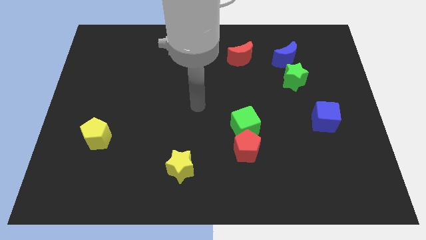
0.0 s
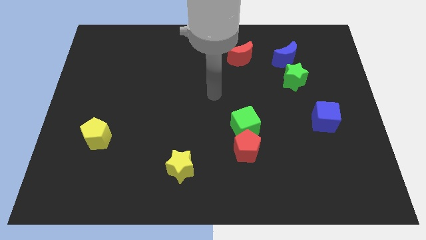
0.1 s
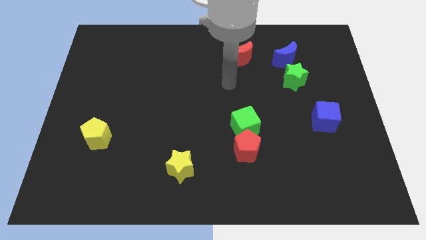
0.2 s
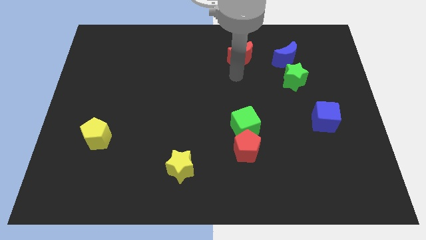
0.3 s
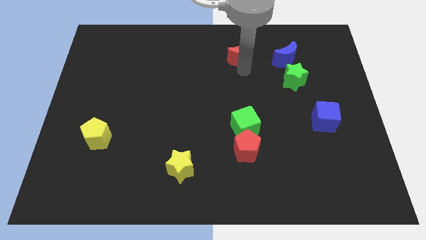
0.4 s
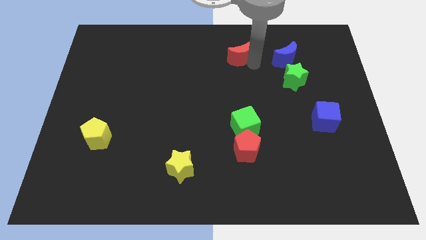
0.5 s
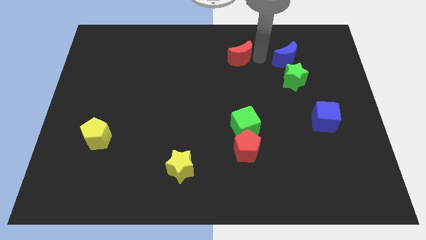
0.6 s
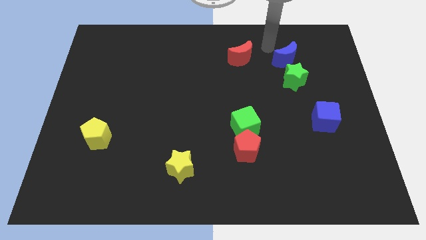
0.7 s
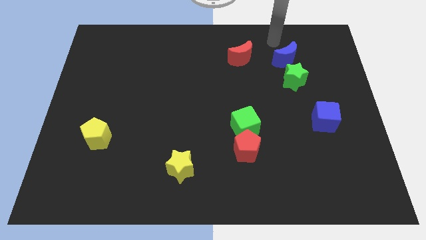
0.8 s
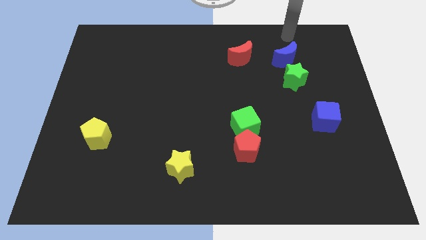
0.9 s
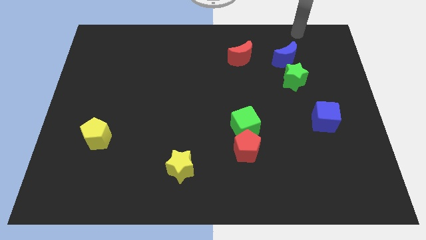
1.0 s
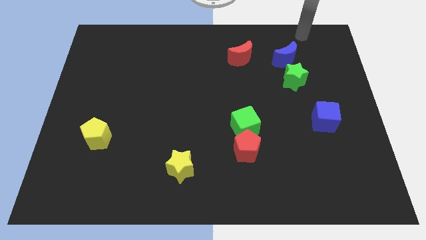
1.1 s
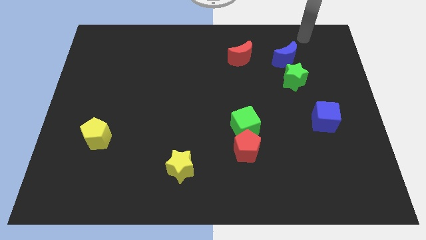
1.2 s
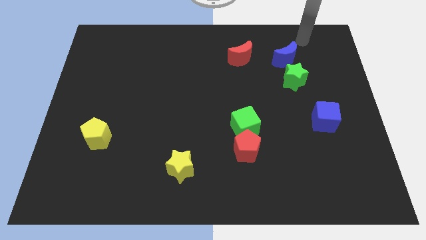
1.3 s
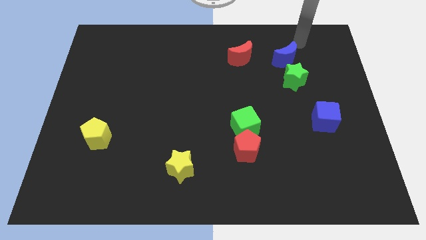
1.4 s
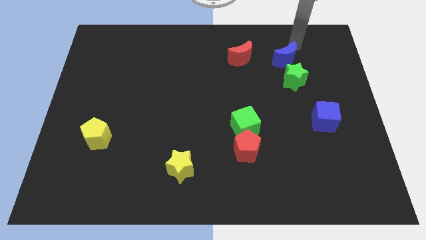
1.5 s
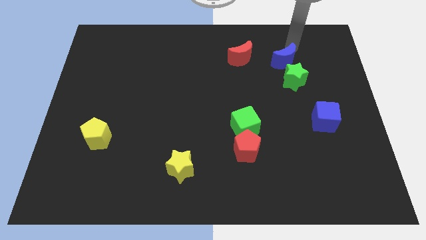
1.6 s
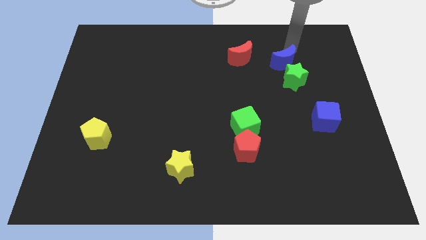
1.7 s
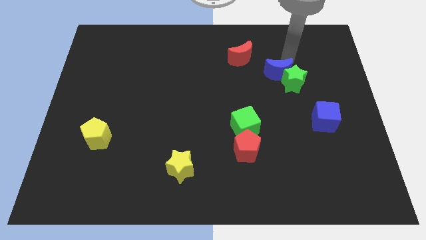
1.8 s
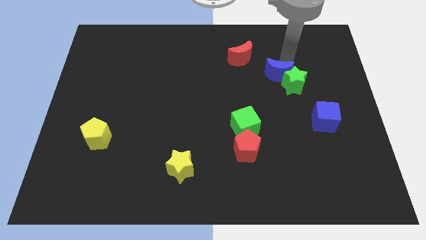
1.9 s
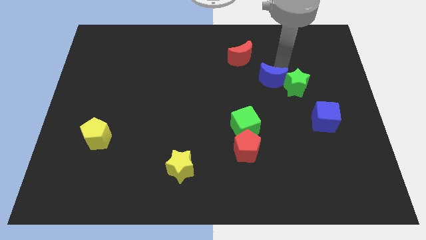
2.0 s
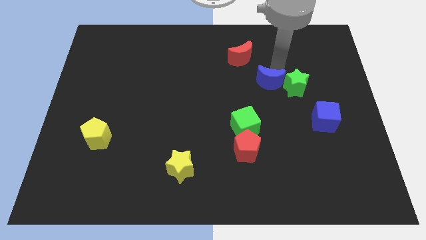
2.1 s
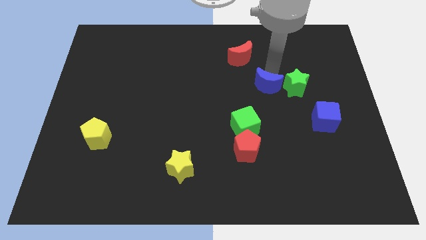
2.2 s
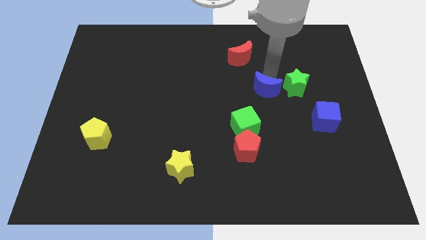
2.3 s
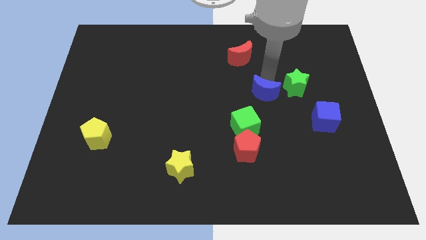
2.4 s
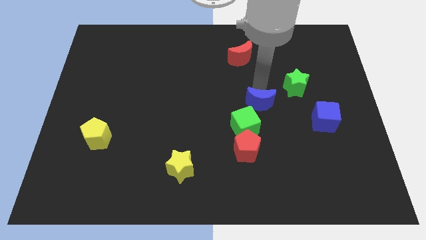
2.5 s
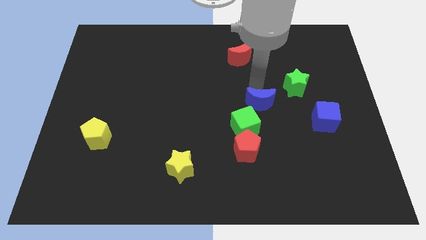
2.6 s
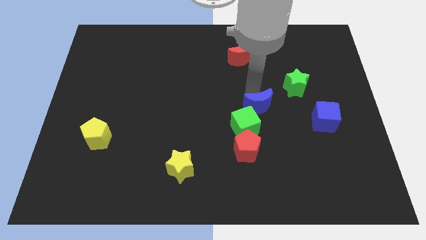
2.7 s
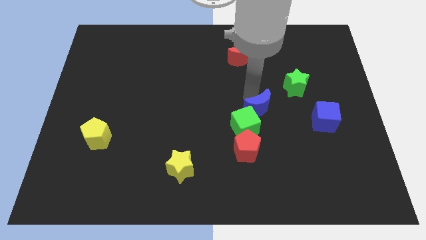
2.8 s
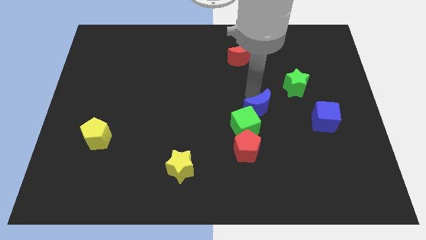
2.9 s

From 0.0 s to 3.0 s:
push the blue moon to the green cube

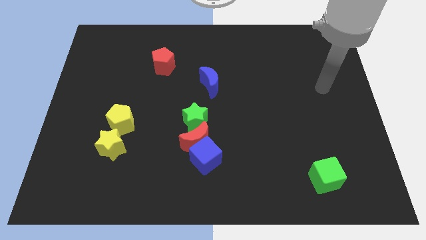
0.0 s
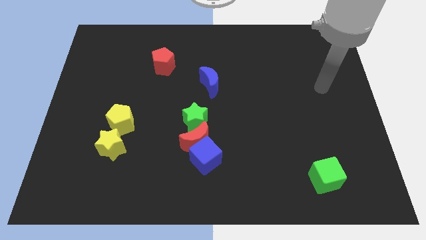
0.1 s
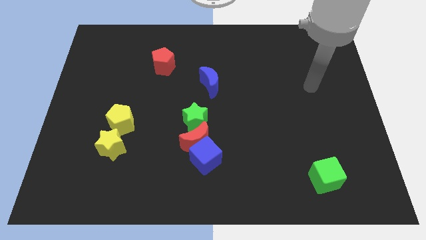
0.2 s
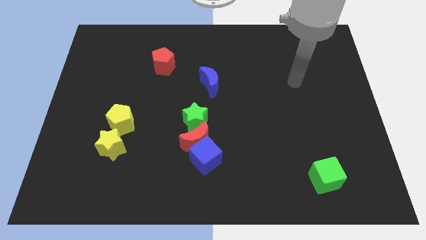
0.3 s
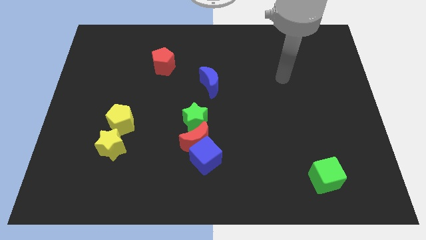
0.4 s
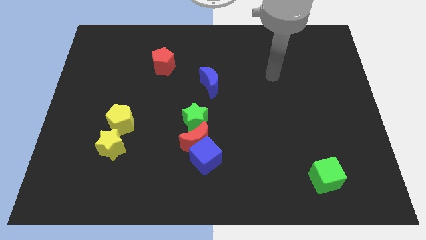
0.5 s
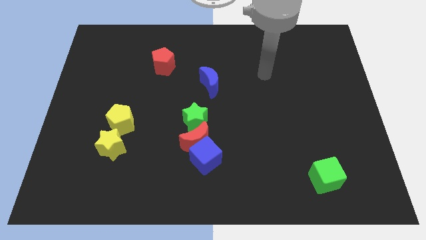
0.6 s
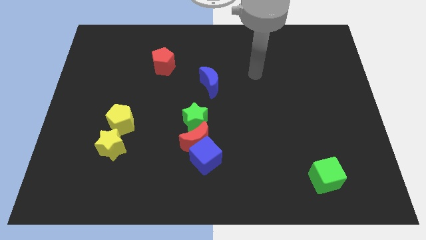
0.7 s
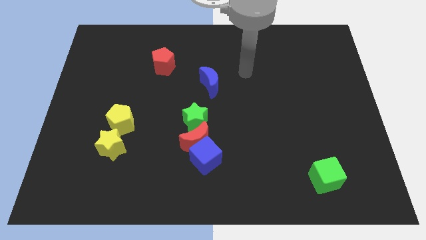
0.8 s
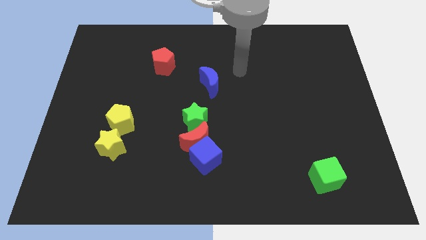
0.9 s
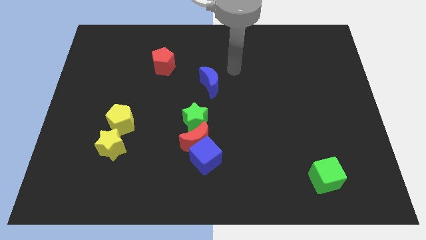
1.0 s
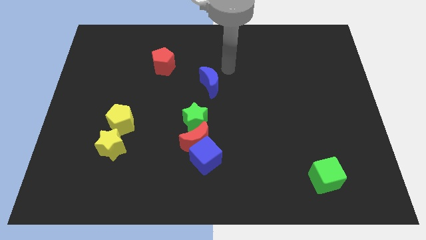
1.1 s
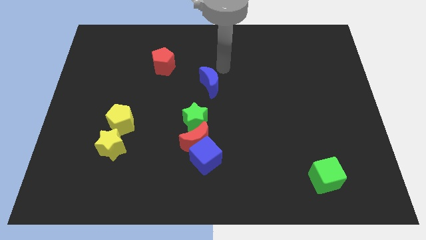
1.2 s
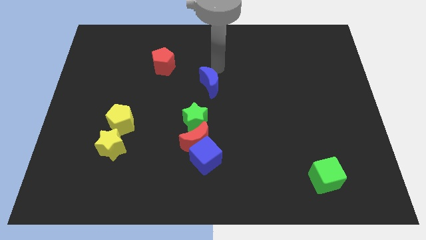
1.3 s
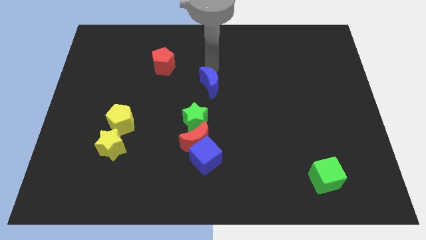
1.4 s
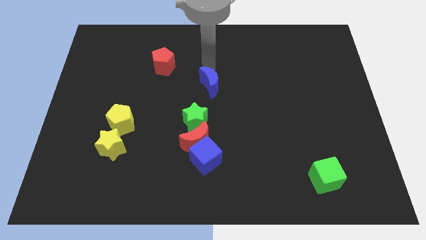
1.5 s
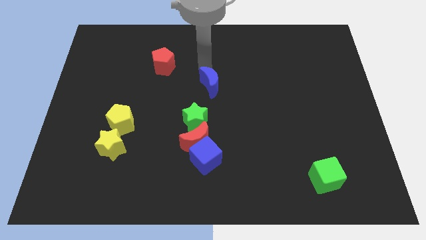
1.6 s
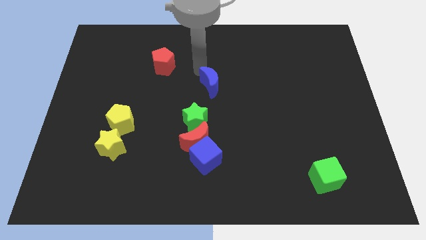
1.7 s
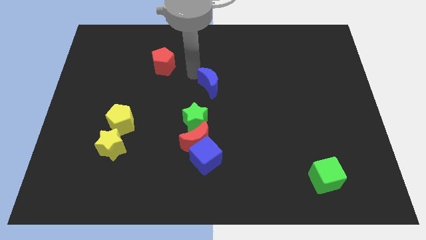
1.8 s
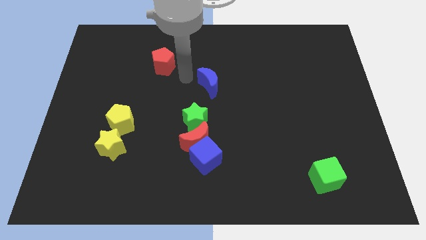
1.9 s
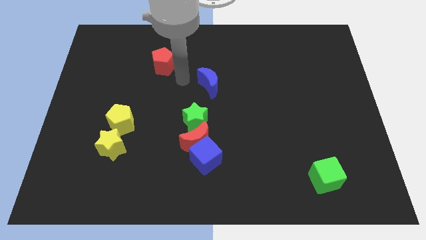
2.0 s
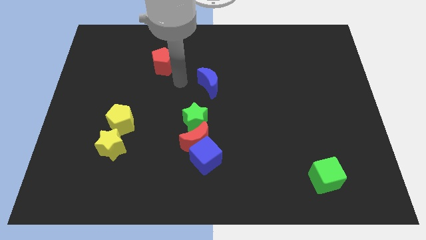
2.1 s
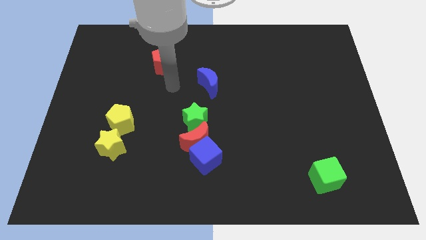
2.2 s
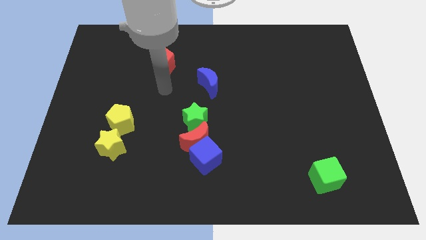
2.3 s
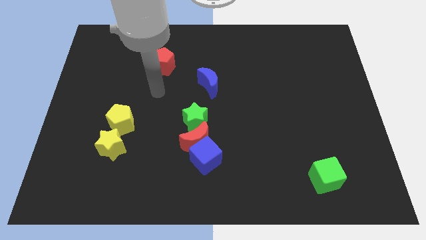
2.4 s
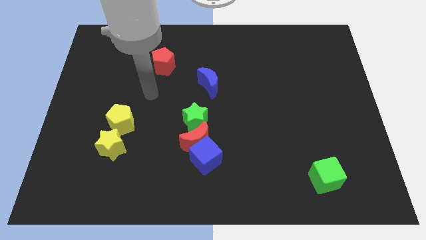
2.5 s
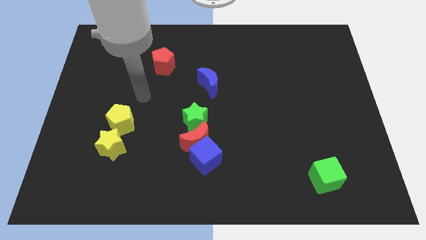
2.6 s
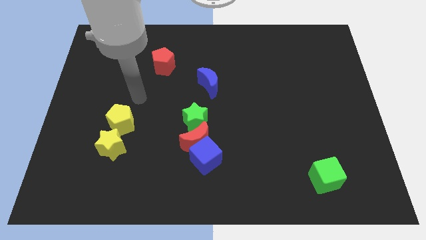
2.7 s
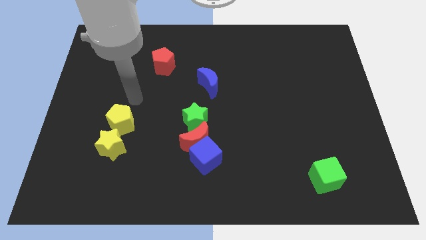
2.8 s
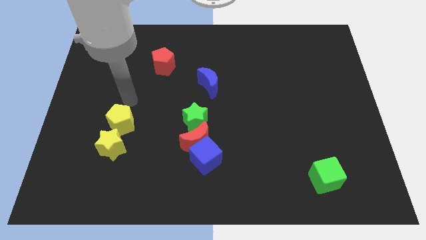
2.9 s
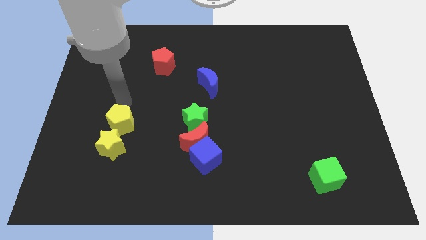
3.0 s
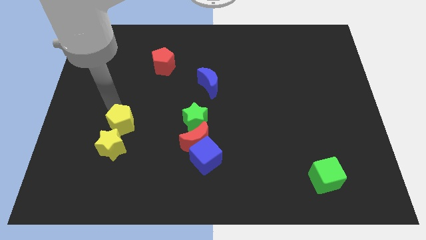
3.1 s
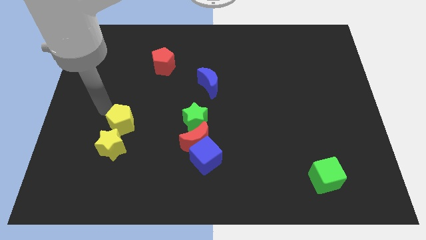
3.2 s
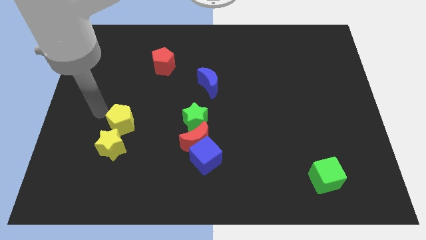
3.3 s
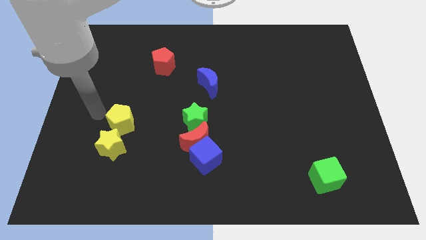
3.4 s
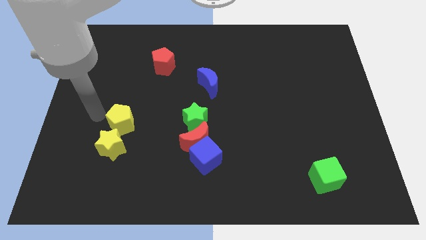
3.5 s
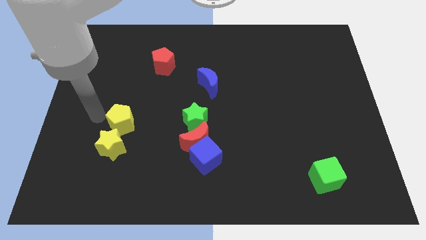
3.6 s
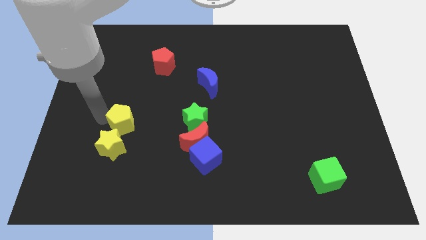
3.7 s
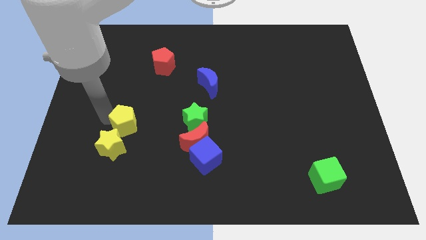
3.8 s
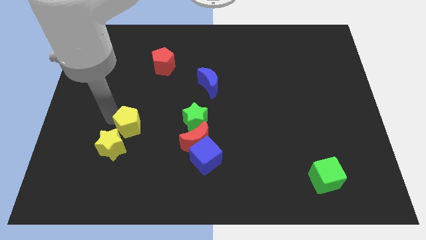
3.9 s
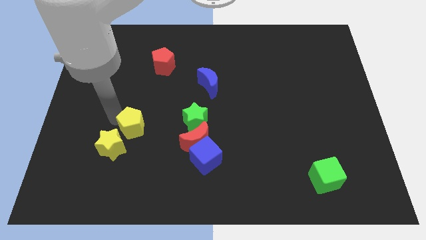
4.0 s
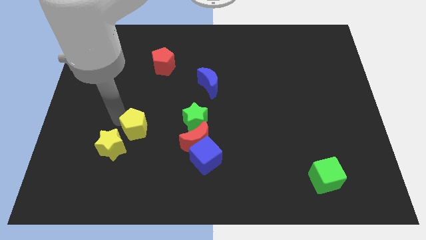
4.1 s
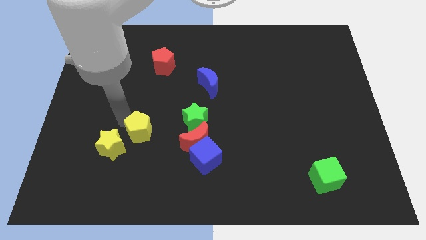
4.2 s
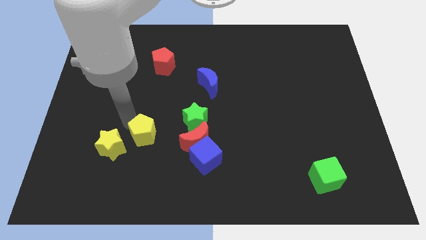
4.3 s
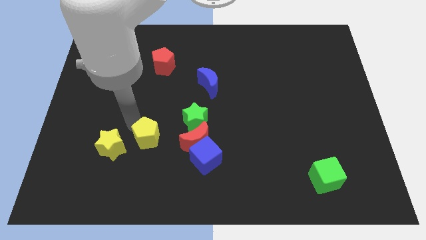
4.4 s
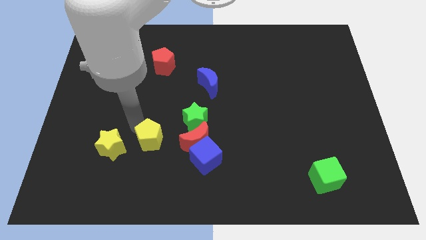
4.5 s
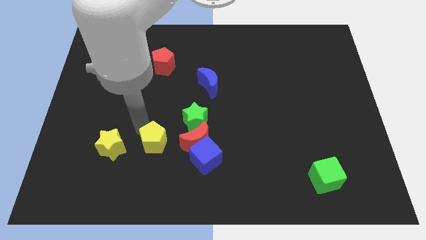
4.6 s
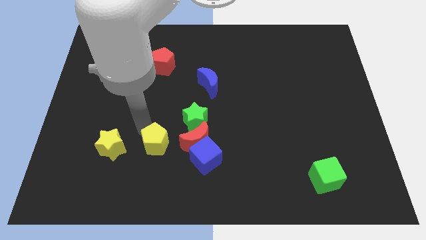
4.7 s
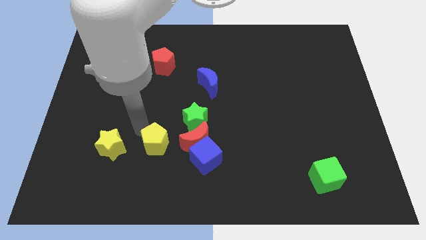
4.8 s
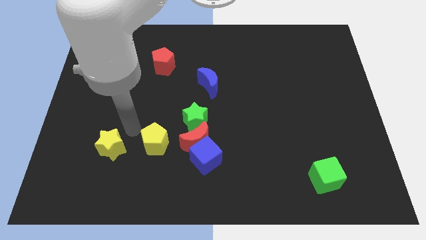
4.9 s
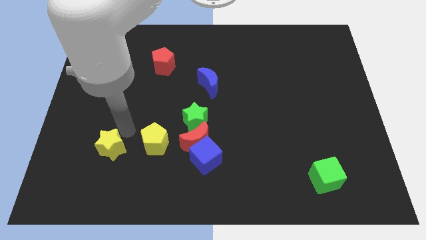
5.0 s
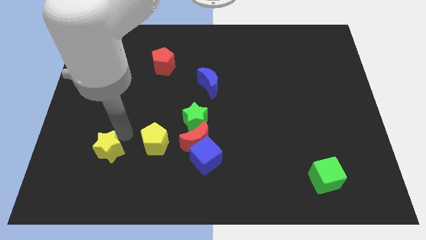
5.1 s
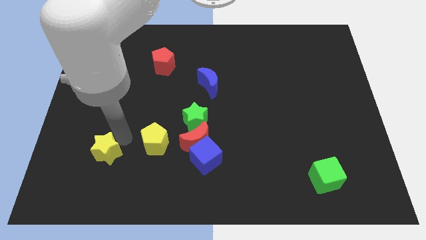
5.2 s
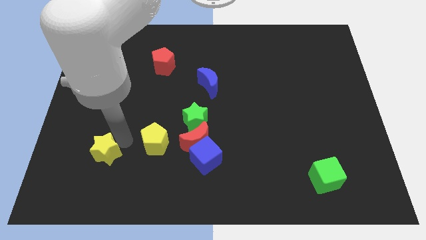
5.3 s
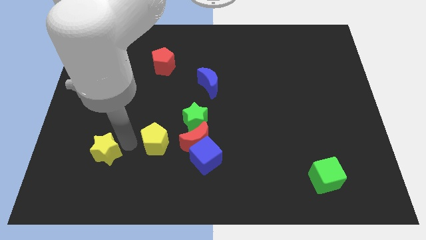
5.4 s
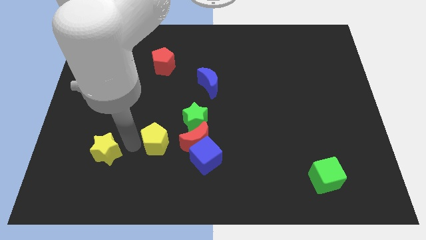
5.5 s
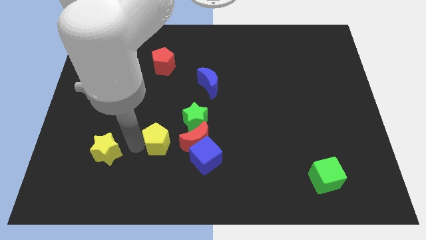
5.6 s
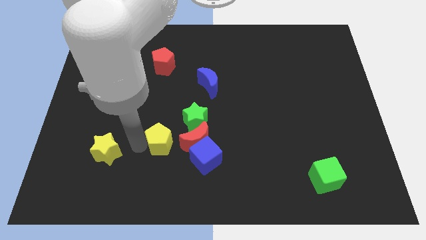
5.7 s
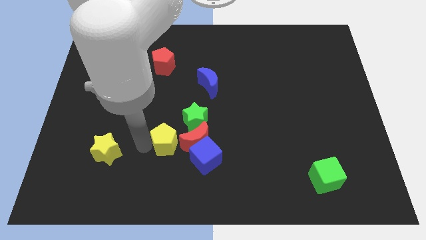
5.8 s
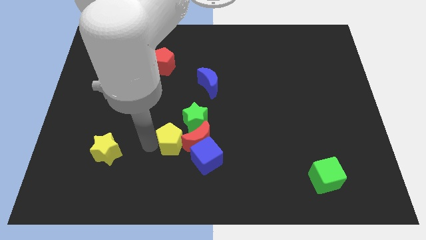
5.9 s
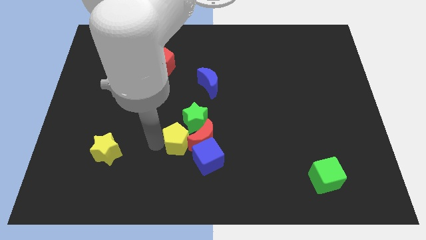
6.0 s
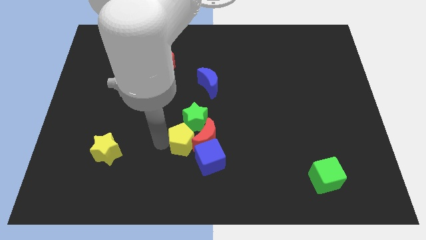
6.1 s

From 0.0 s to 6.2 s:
put the yellow pentagon next to the red moon
